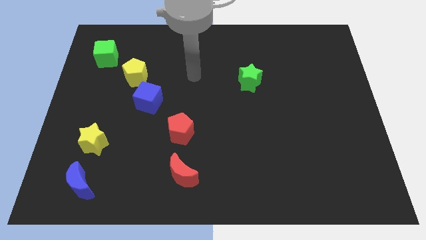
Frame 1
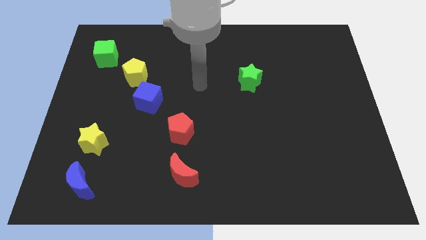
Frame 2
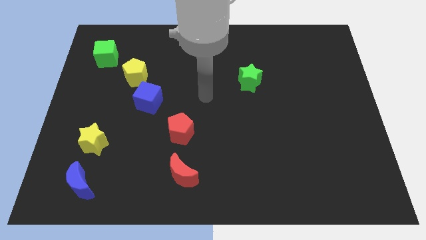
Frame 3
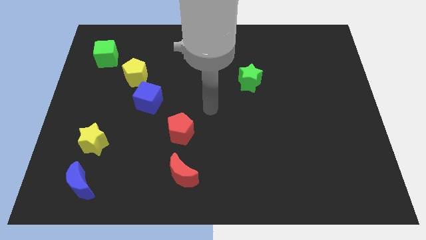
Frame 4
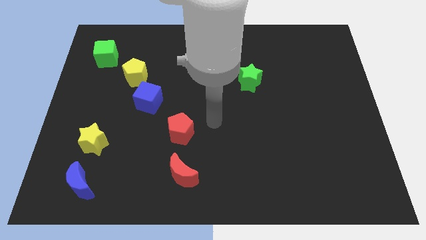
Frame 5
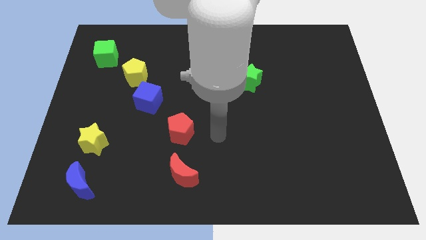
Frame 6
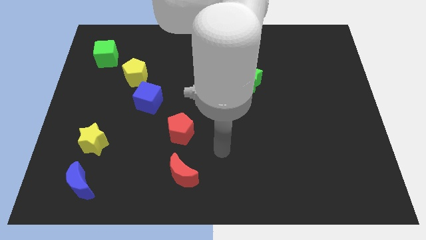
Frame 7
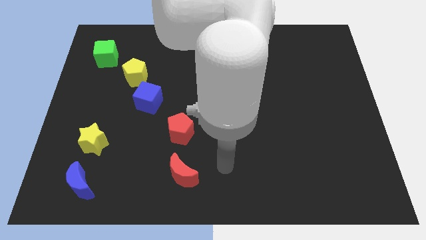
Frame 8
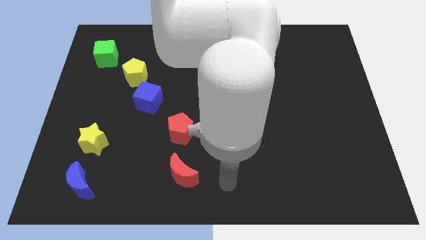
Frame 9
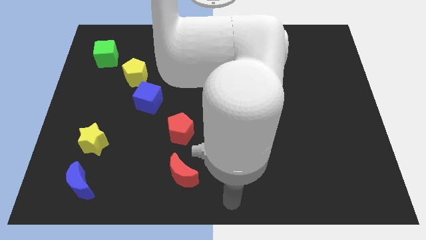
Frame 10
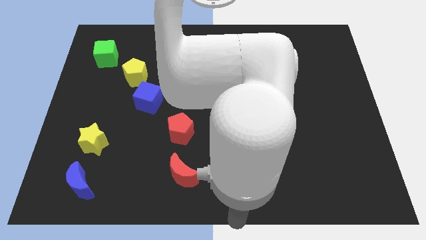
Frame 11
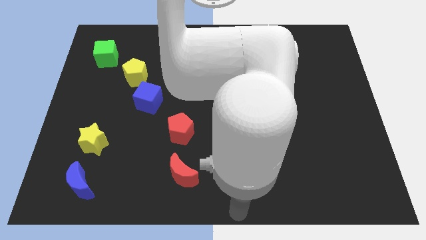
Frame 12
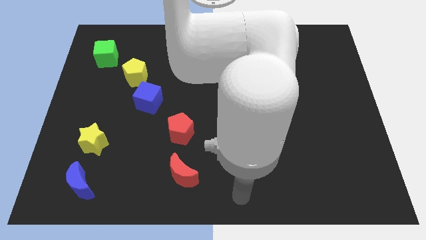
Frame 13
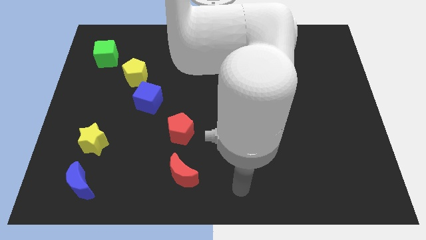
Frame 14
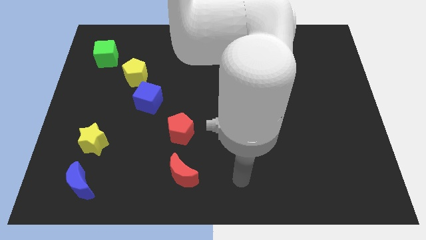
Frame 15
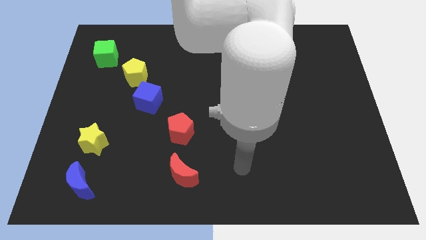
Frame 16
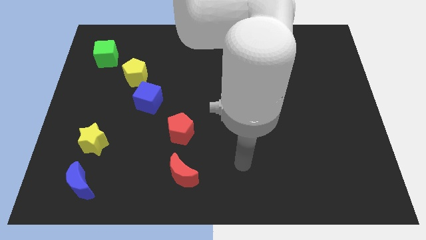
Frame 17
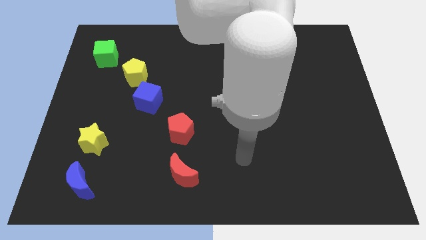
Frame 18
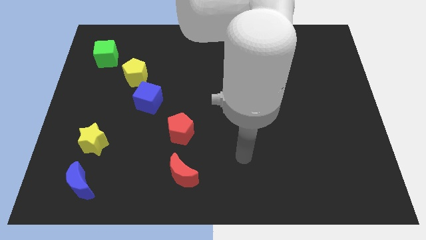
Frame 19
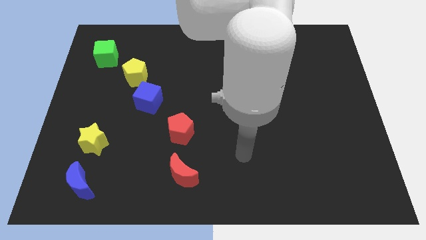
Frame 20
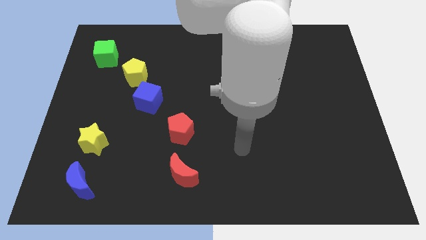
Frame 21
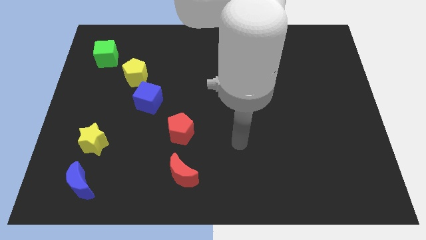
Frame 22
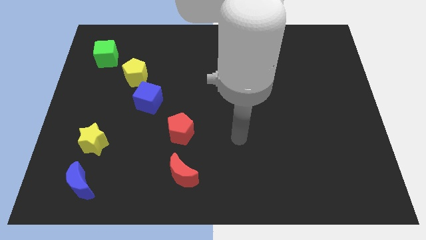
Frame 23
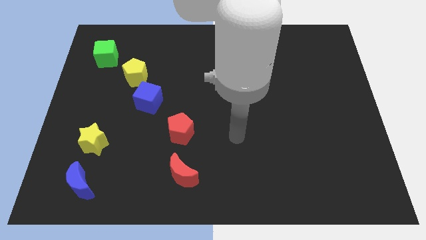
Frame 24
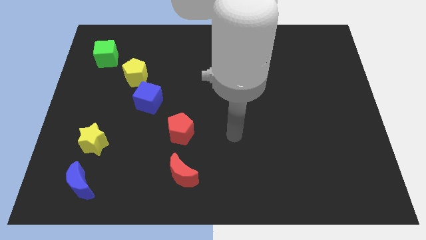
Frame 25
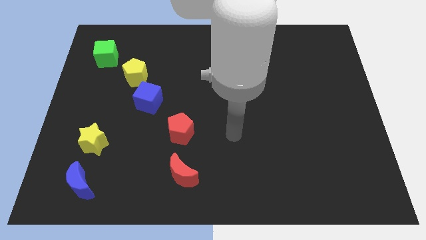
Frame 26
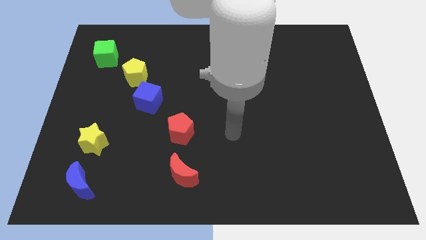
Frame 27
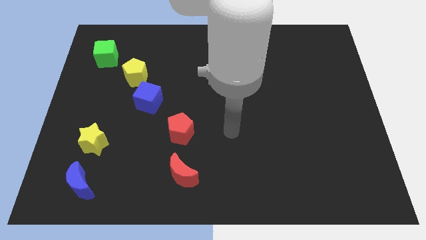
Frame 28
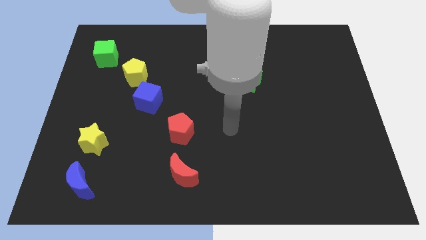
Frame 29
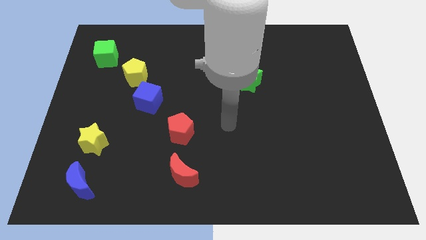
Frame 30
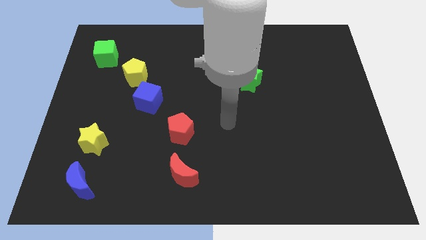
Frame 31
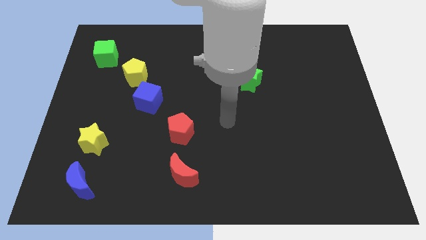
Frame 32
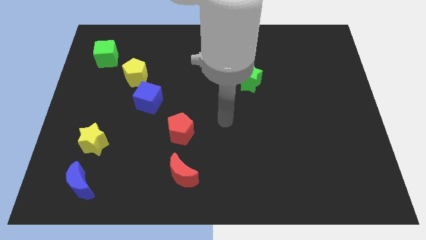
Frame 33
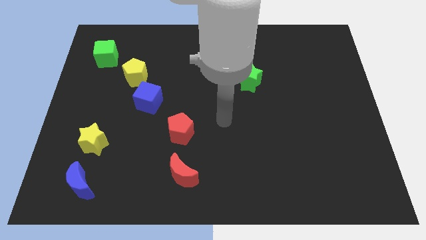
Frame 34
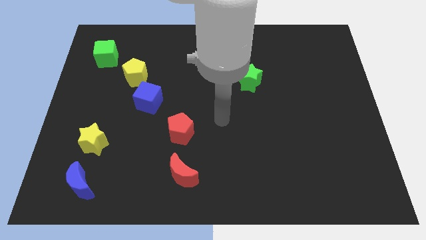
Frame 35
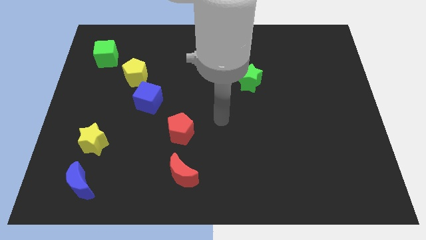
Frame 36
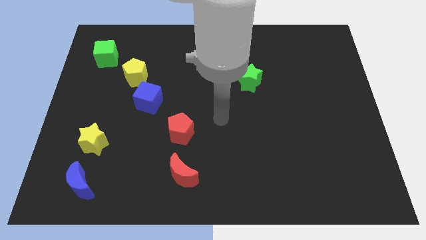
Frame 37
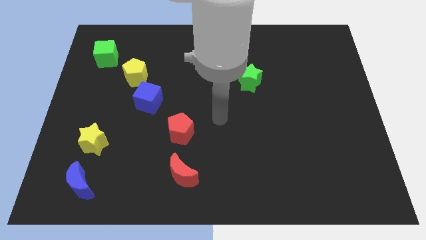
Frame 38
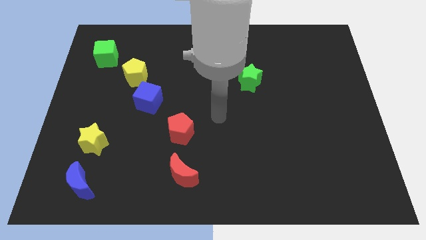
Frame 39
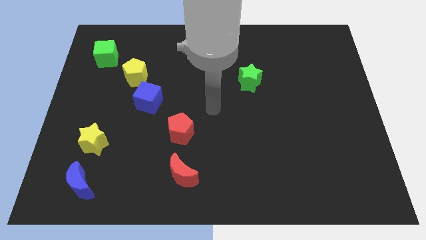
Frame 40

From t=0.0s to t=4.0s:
point your arm at the top right side of the red pentagon

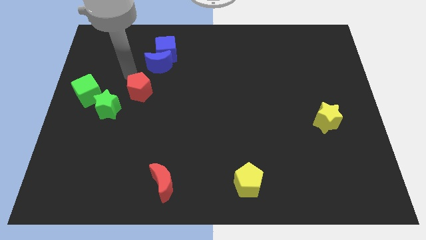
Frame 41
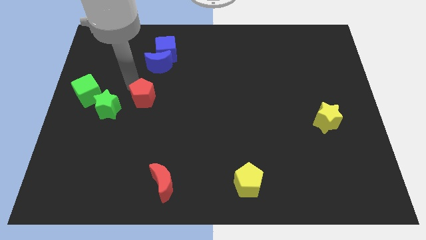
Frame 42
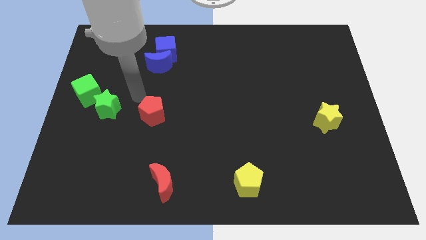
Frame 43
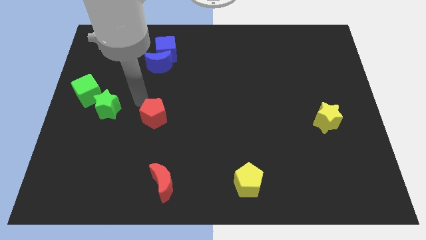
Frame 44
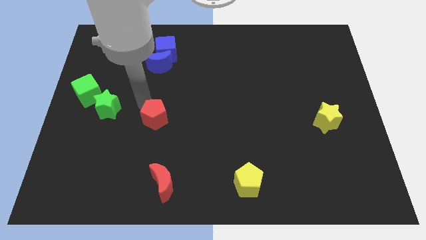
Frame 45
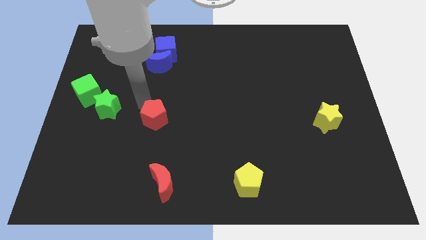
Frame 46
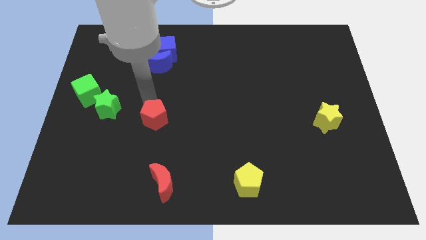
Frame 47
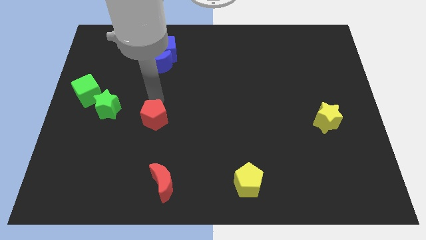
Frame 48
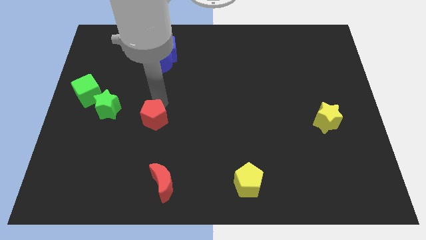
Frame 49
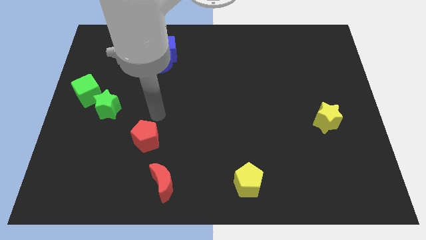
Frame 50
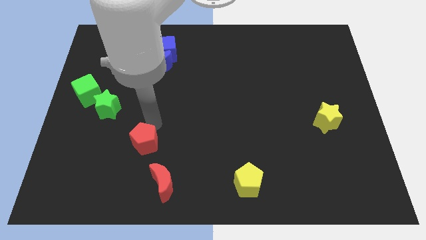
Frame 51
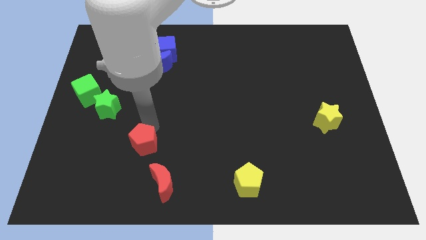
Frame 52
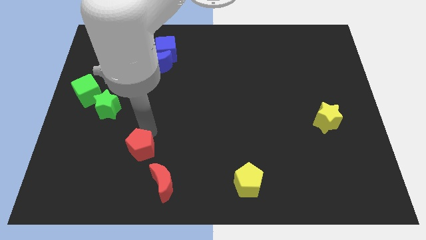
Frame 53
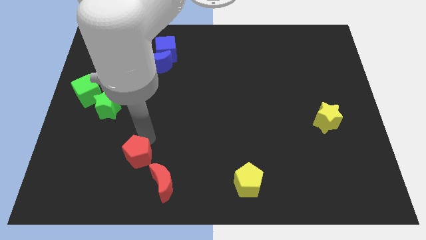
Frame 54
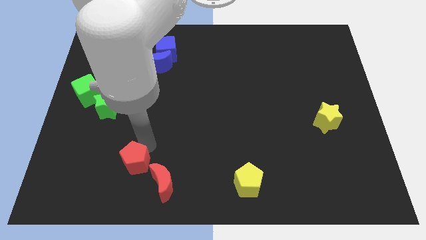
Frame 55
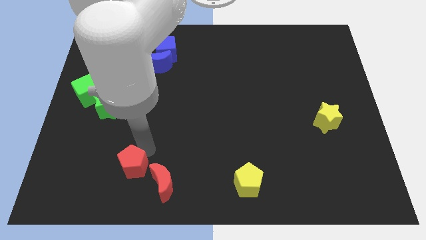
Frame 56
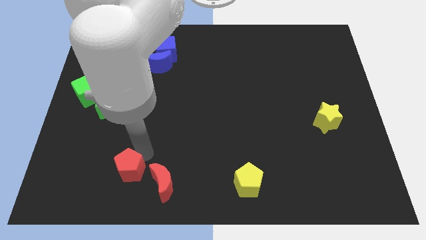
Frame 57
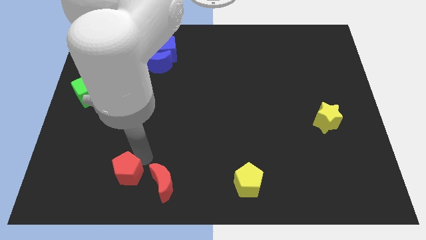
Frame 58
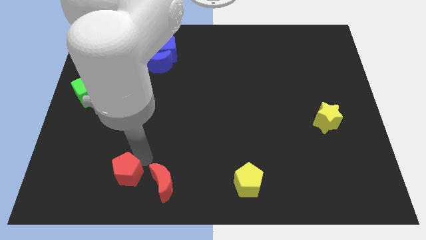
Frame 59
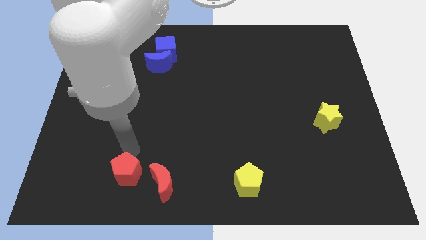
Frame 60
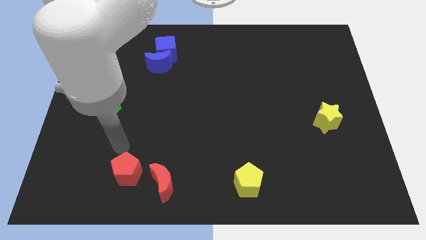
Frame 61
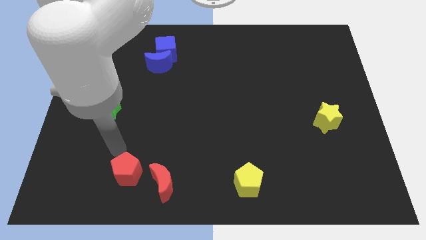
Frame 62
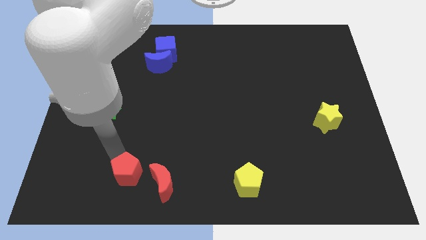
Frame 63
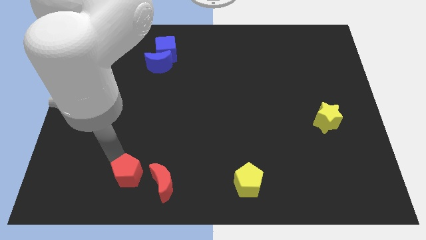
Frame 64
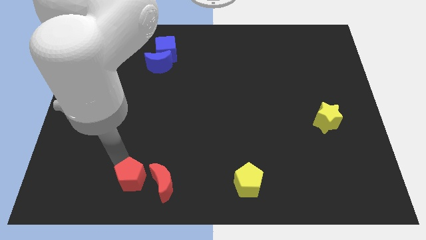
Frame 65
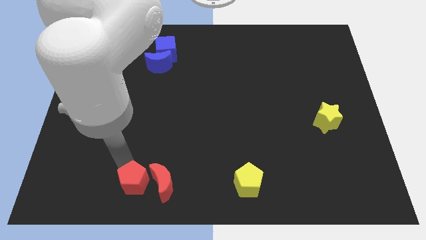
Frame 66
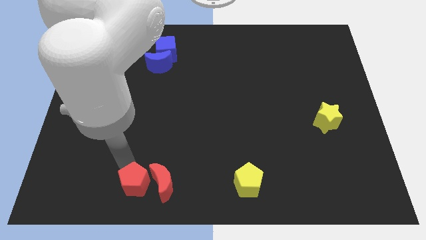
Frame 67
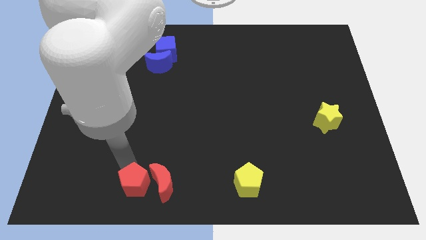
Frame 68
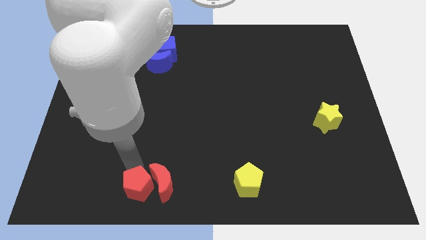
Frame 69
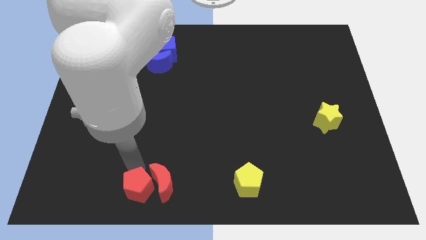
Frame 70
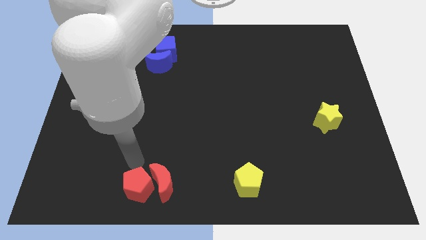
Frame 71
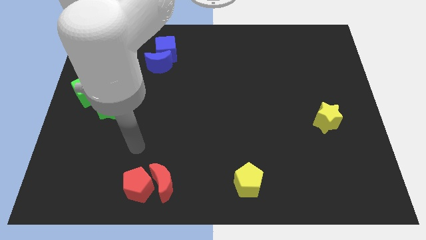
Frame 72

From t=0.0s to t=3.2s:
slide the red pentagon to the left side of the red moon

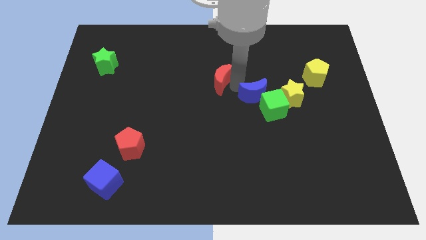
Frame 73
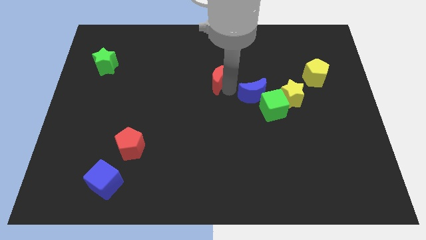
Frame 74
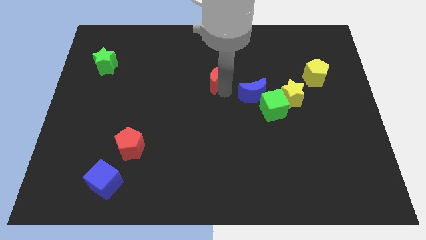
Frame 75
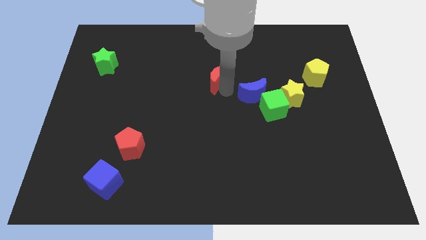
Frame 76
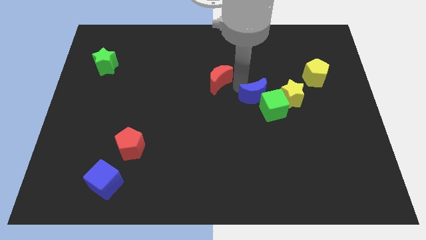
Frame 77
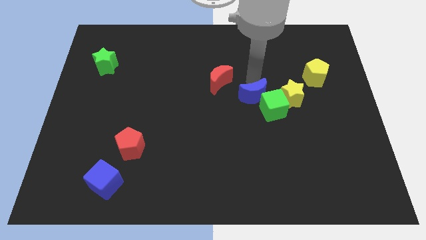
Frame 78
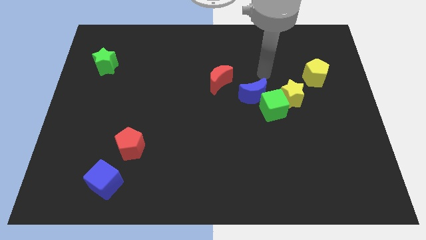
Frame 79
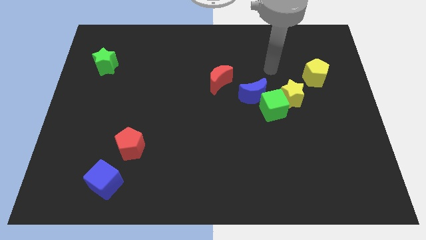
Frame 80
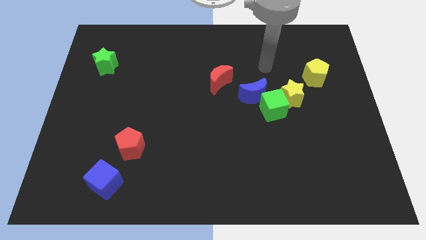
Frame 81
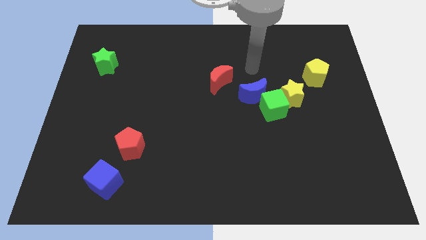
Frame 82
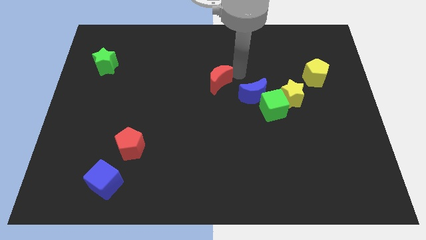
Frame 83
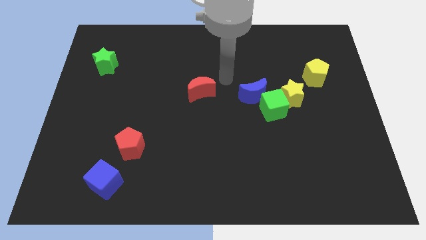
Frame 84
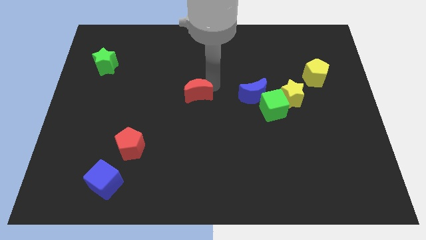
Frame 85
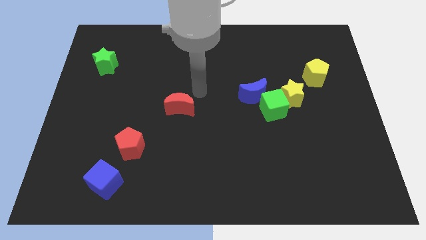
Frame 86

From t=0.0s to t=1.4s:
move red moon towards red pentagon
